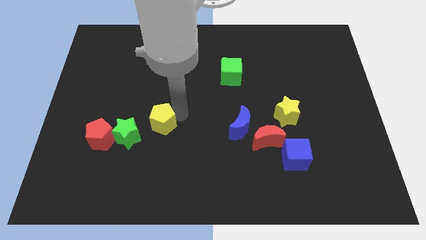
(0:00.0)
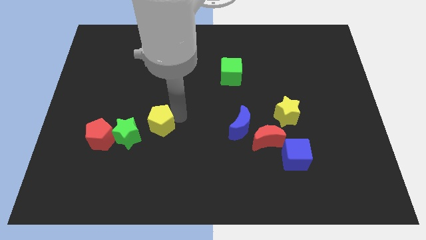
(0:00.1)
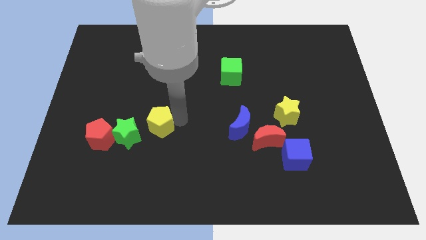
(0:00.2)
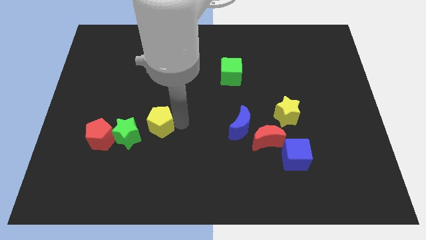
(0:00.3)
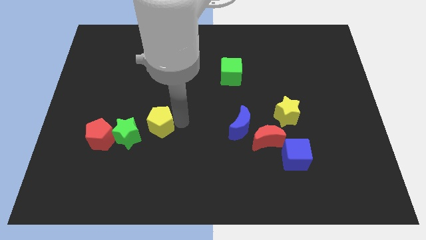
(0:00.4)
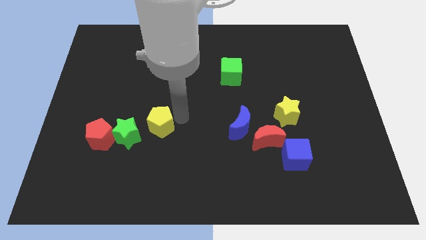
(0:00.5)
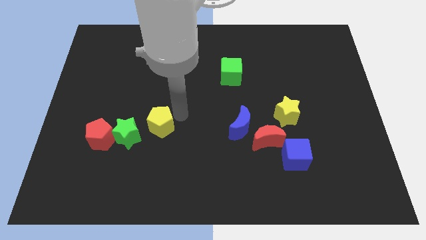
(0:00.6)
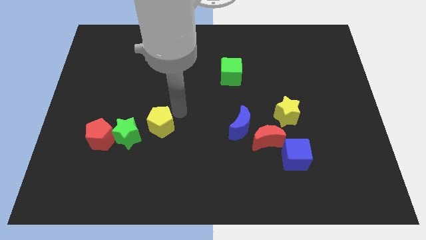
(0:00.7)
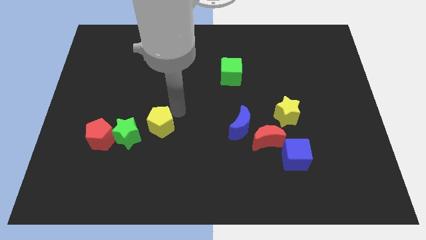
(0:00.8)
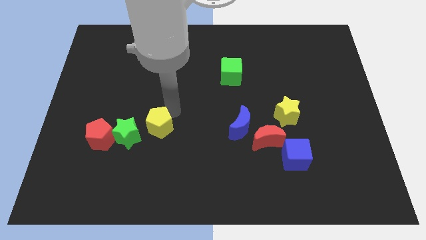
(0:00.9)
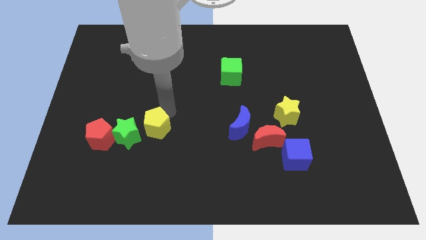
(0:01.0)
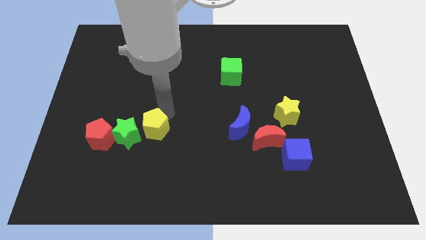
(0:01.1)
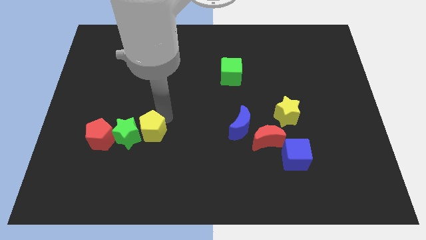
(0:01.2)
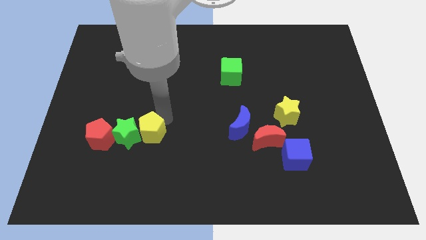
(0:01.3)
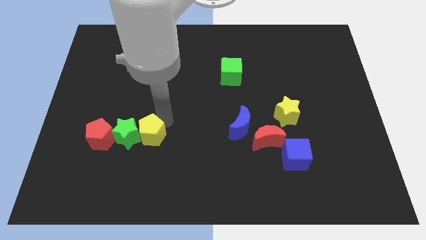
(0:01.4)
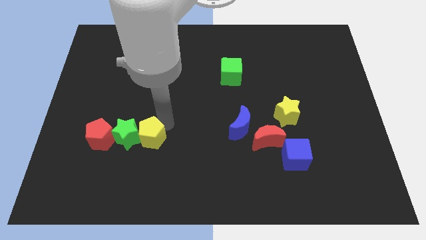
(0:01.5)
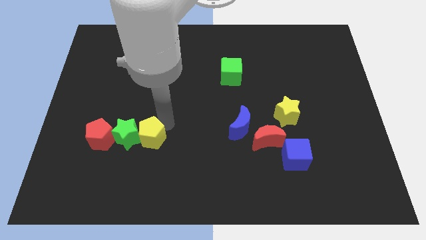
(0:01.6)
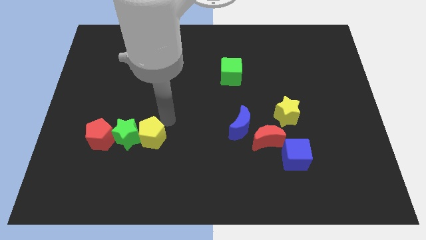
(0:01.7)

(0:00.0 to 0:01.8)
push the yellow pentagon right to the green star

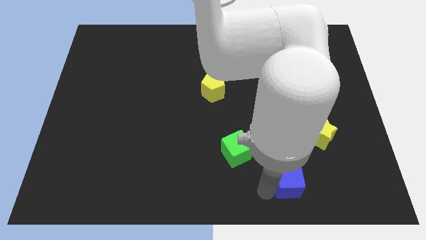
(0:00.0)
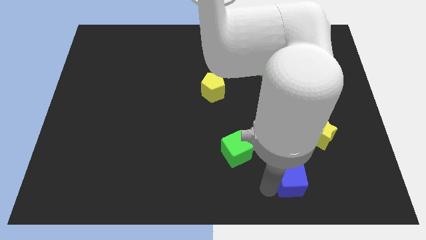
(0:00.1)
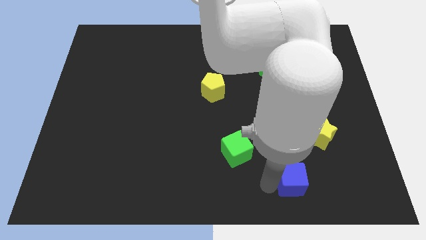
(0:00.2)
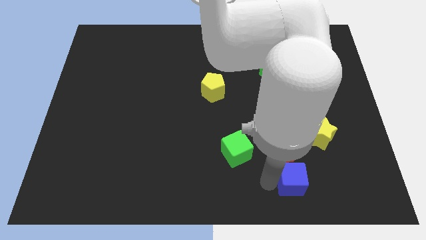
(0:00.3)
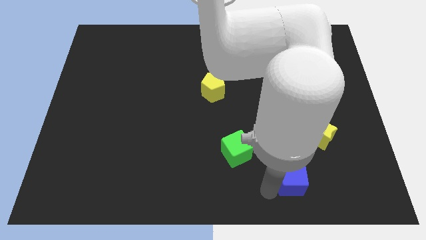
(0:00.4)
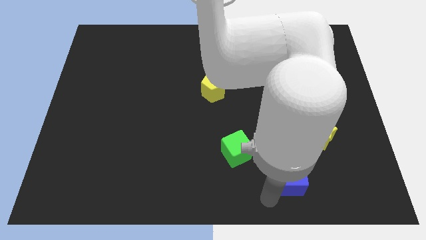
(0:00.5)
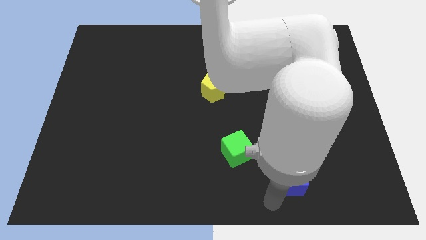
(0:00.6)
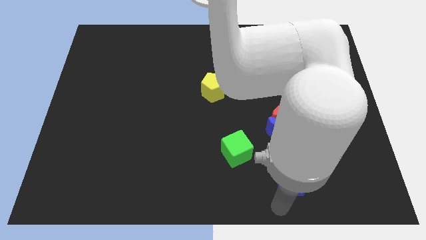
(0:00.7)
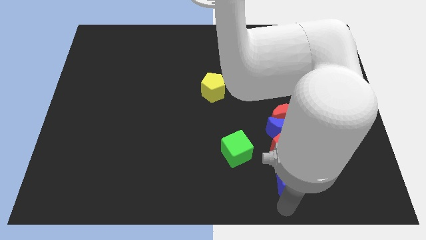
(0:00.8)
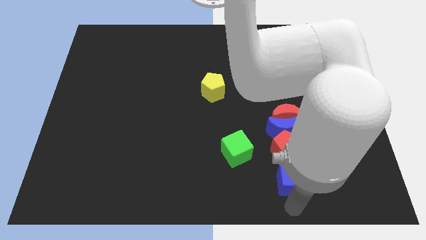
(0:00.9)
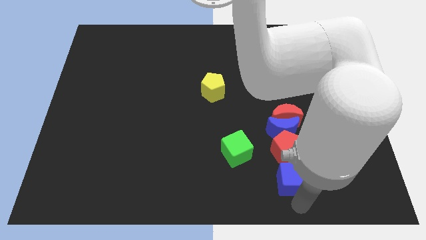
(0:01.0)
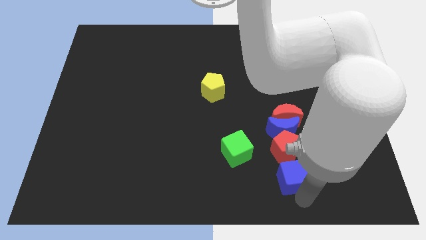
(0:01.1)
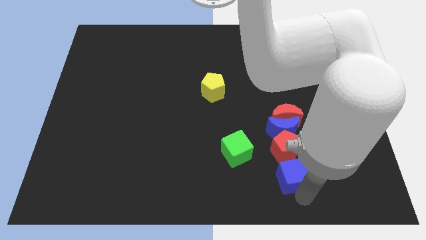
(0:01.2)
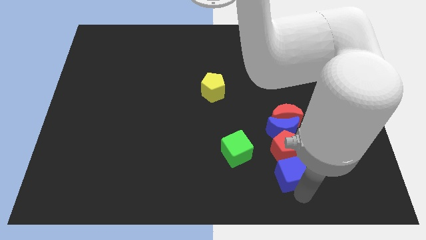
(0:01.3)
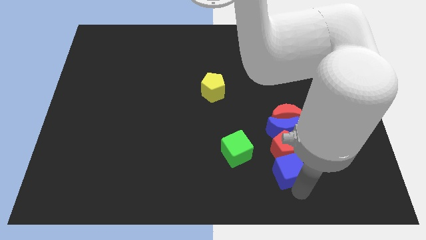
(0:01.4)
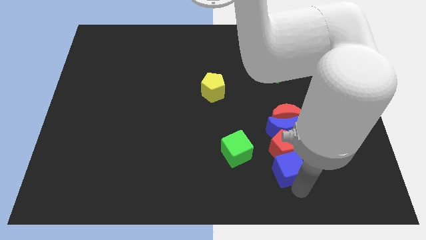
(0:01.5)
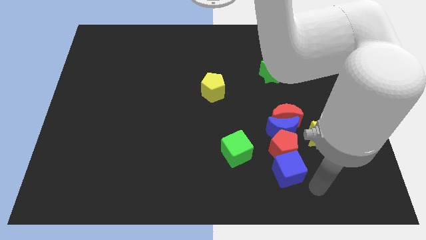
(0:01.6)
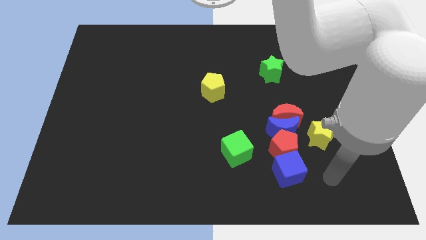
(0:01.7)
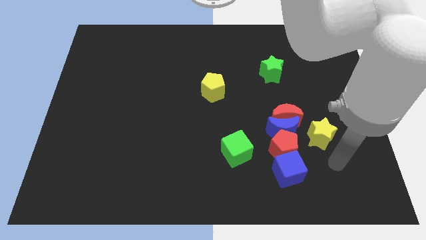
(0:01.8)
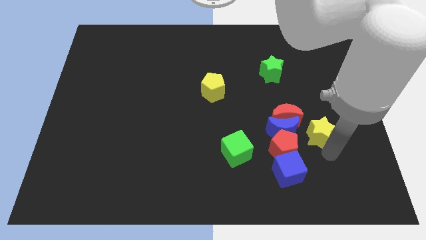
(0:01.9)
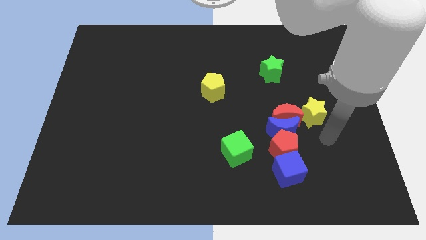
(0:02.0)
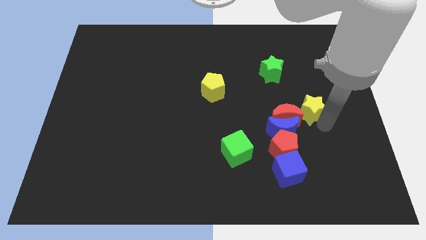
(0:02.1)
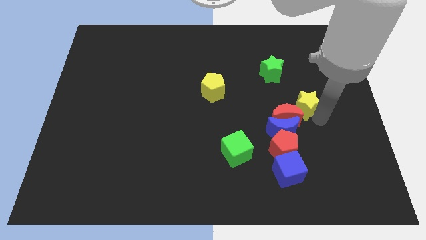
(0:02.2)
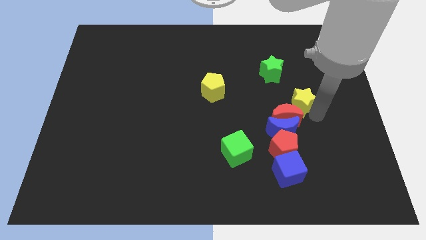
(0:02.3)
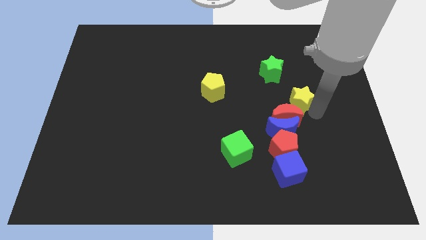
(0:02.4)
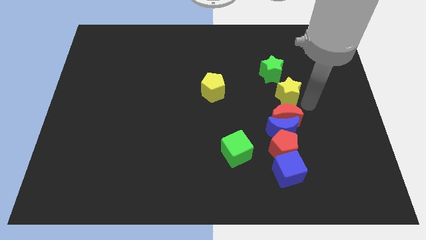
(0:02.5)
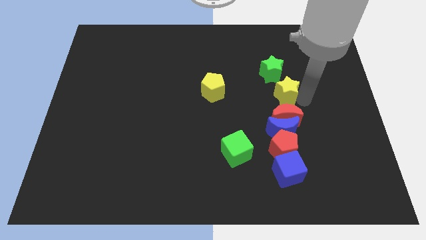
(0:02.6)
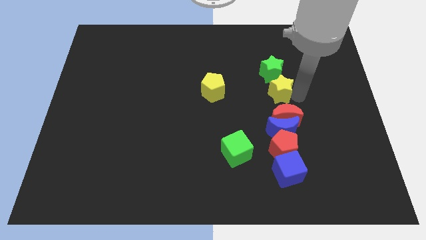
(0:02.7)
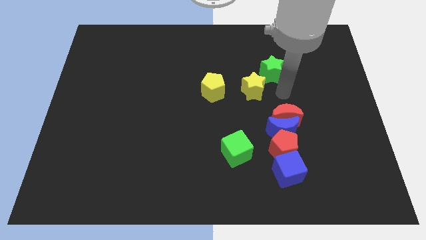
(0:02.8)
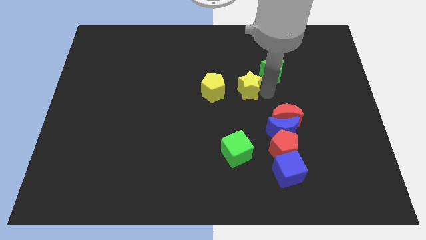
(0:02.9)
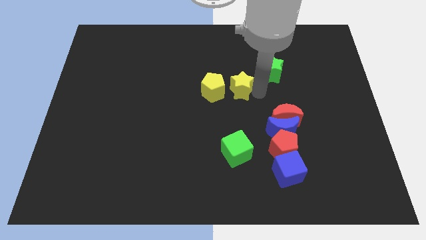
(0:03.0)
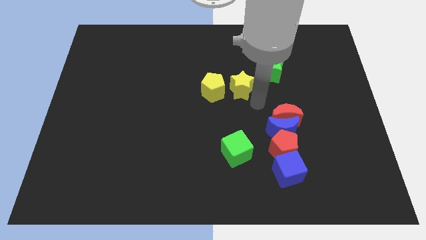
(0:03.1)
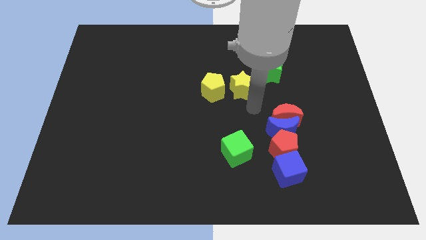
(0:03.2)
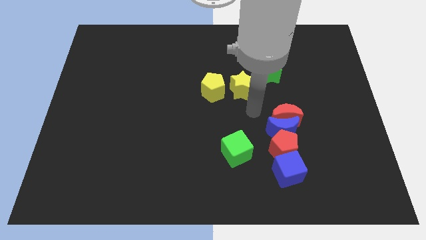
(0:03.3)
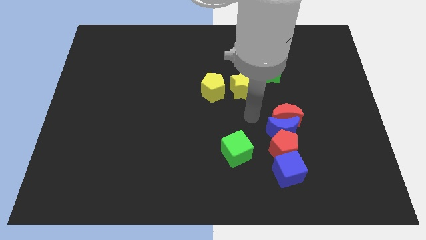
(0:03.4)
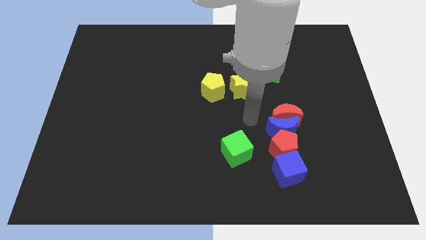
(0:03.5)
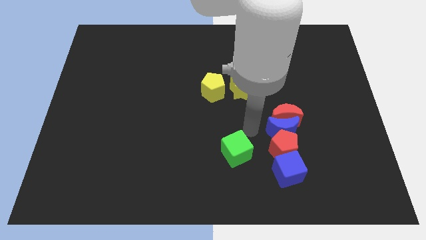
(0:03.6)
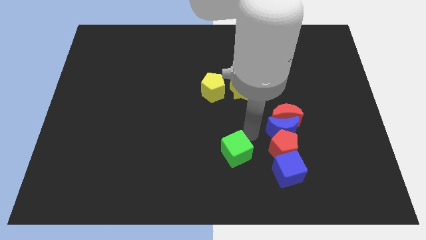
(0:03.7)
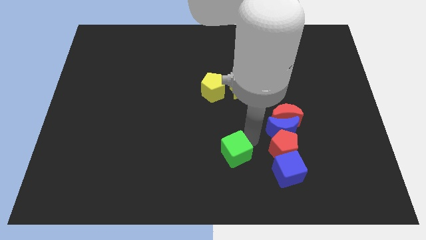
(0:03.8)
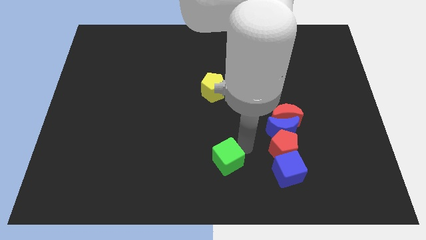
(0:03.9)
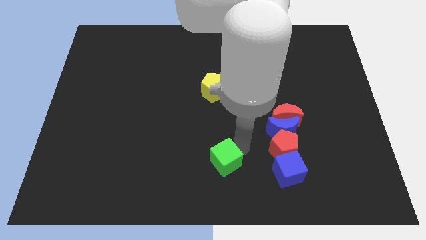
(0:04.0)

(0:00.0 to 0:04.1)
push the yellow star and place it next to the yellow pentagon

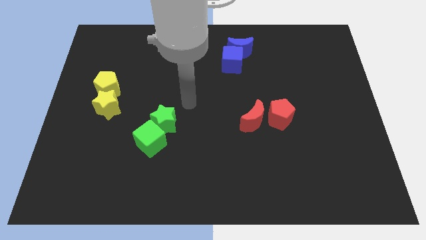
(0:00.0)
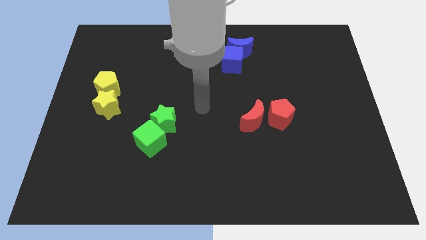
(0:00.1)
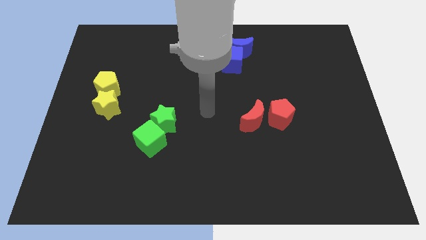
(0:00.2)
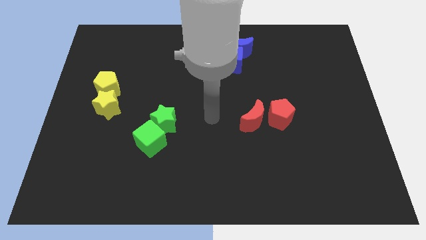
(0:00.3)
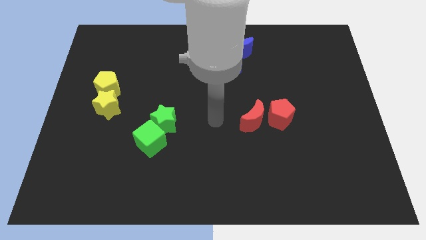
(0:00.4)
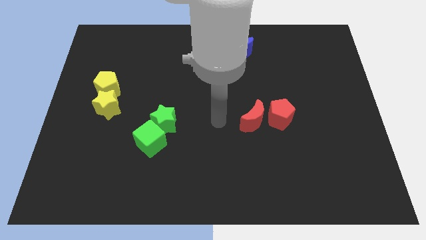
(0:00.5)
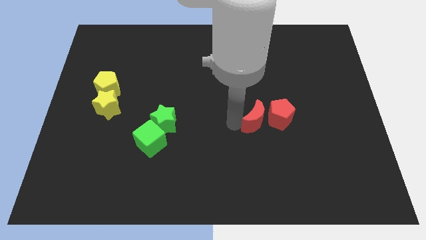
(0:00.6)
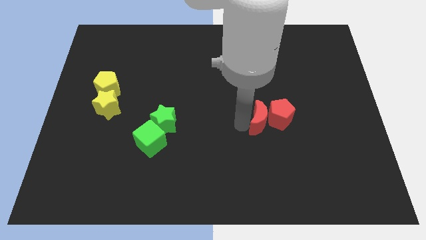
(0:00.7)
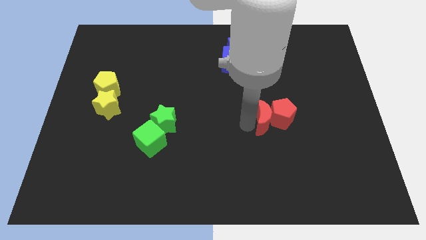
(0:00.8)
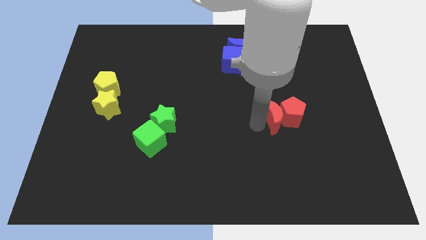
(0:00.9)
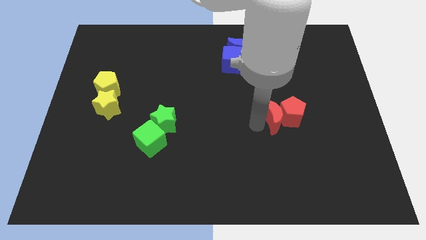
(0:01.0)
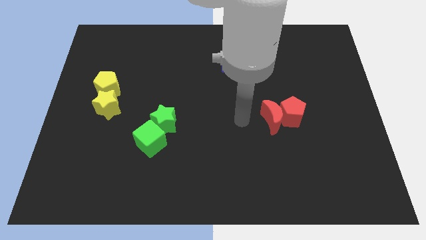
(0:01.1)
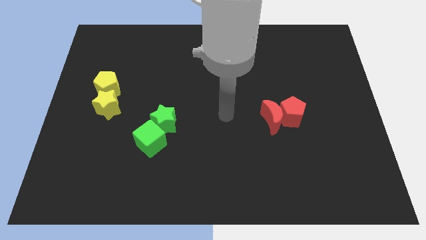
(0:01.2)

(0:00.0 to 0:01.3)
move the red crescent and red pentagon towards the center right side of the board

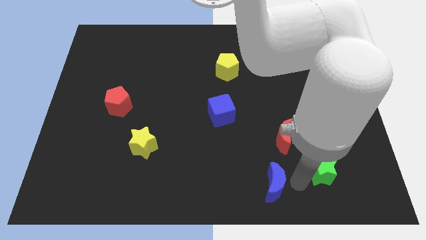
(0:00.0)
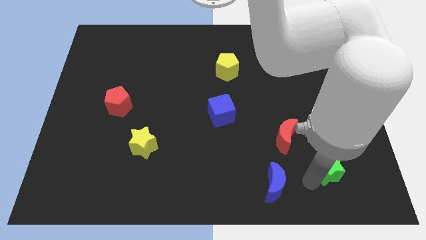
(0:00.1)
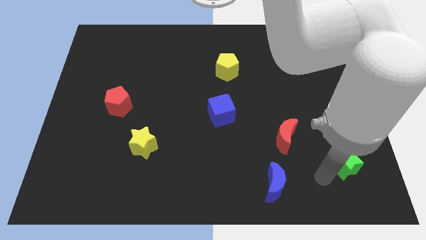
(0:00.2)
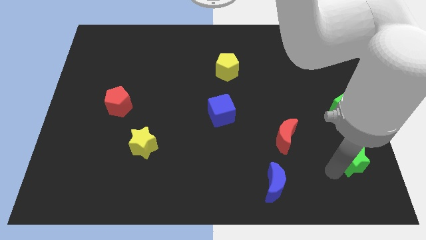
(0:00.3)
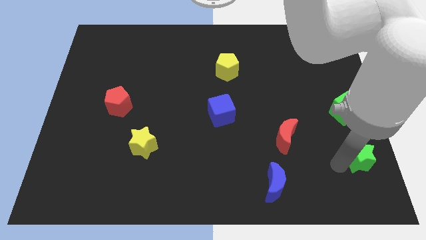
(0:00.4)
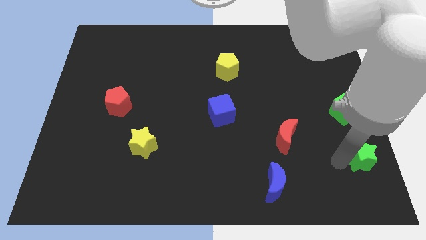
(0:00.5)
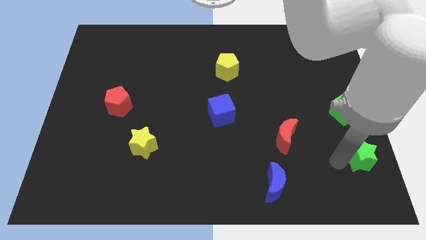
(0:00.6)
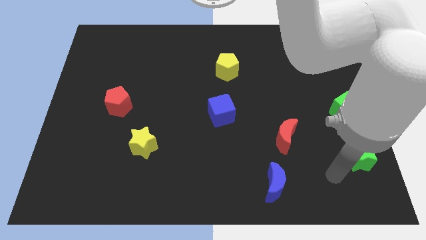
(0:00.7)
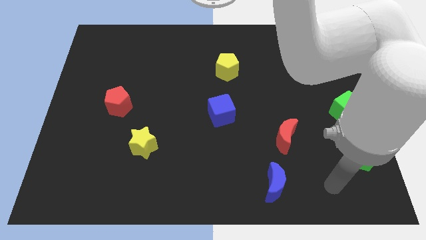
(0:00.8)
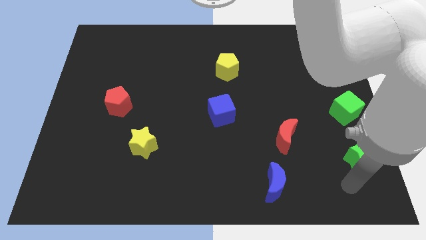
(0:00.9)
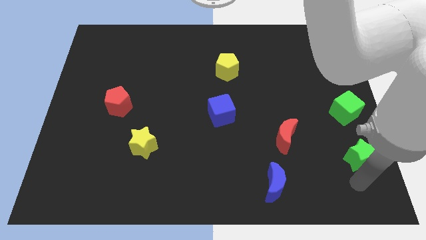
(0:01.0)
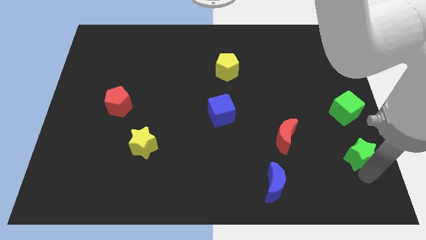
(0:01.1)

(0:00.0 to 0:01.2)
push the green star to the right side of the board

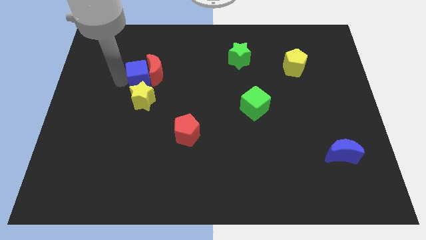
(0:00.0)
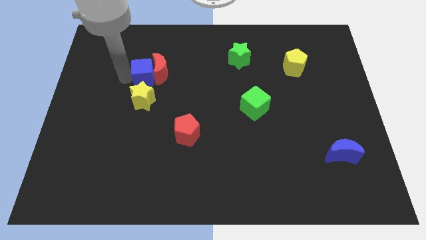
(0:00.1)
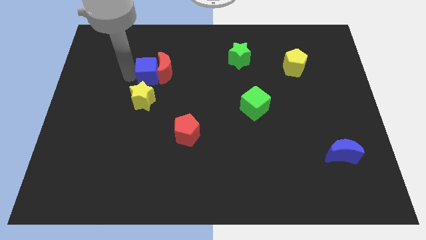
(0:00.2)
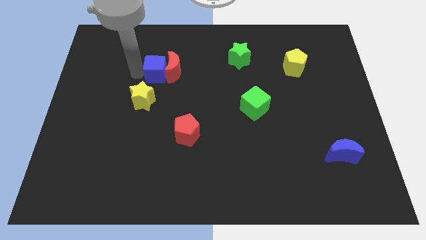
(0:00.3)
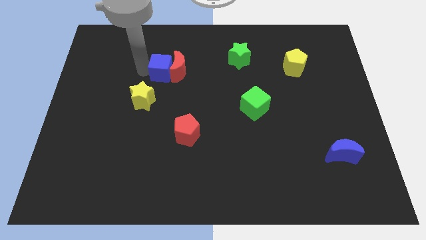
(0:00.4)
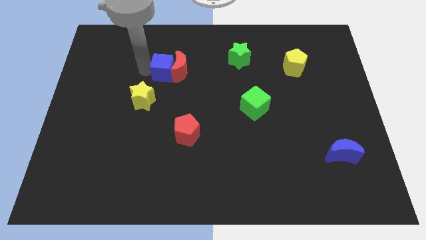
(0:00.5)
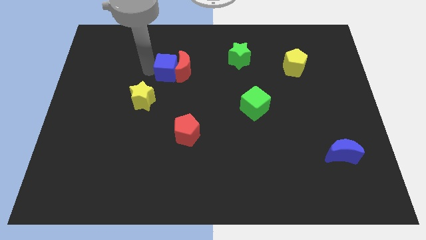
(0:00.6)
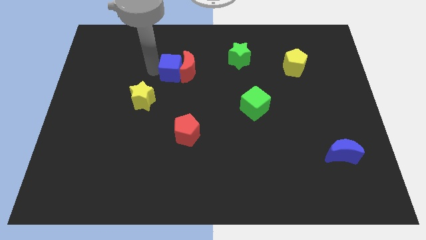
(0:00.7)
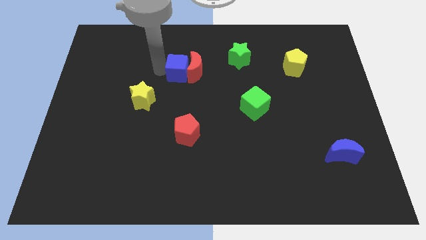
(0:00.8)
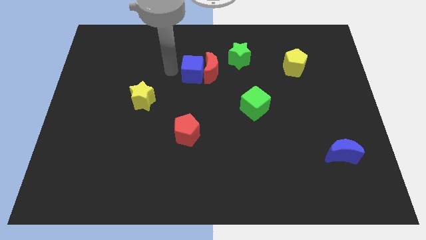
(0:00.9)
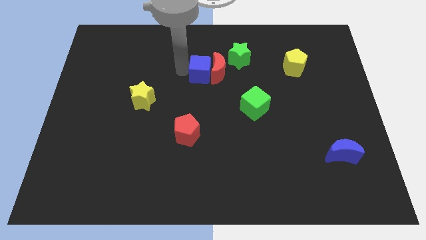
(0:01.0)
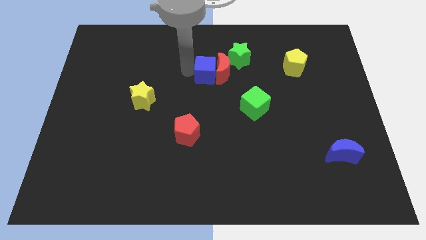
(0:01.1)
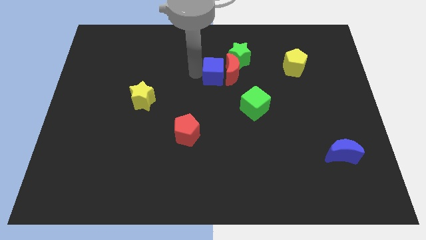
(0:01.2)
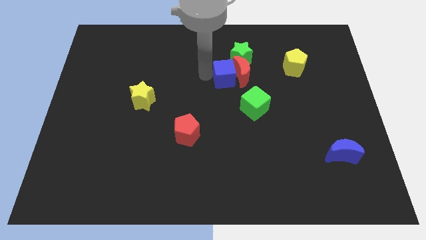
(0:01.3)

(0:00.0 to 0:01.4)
push the blue cube along with the blue crescent to the right
